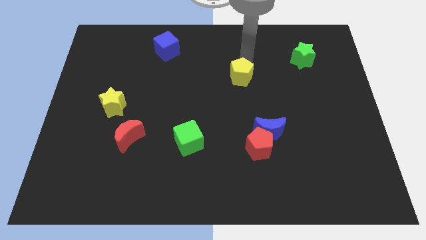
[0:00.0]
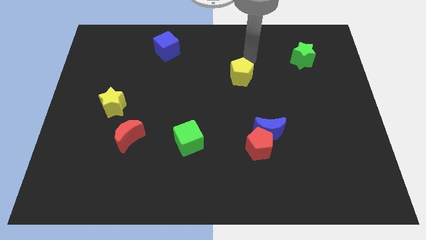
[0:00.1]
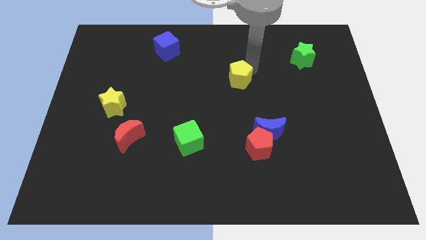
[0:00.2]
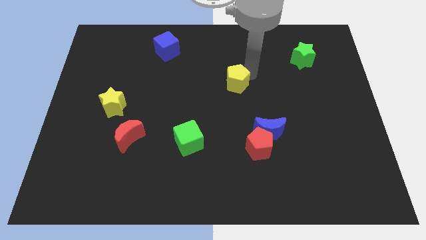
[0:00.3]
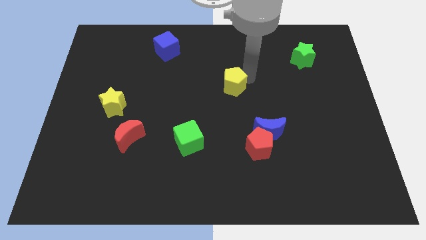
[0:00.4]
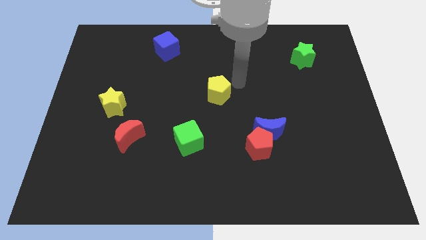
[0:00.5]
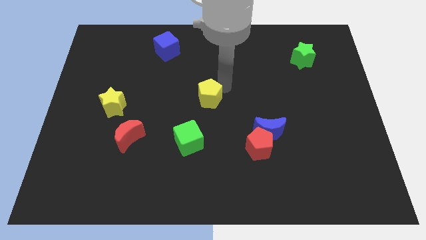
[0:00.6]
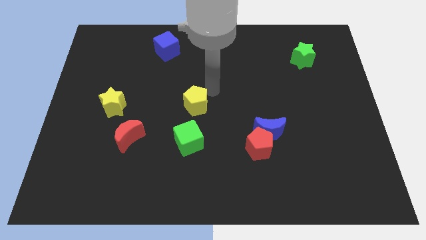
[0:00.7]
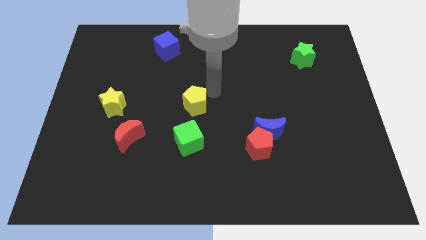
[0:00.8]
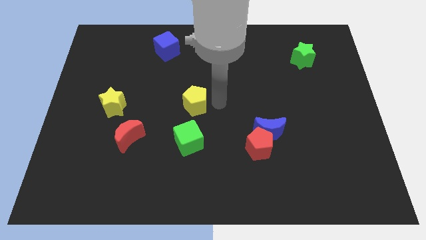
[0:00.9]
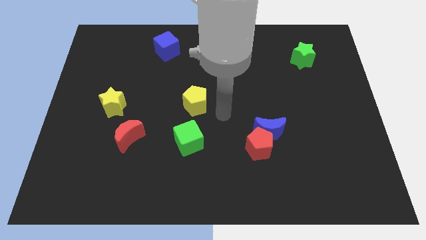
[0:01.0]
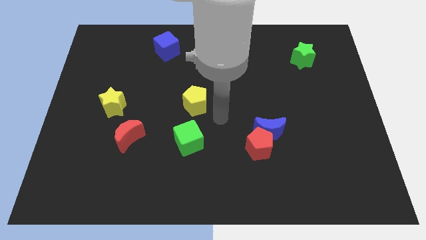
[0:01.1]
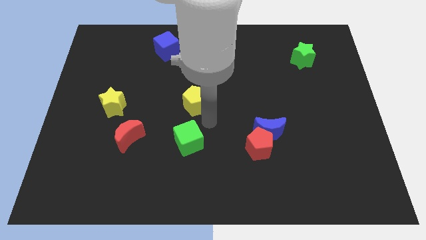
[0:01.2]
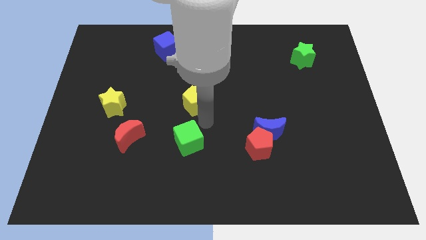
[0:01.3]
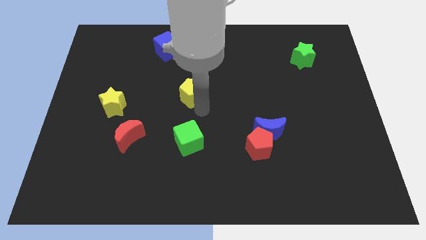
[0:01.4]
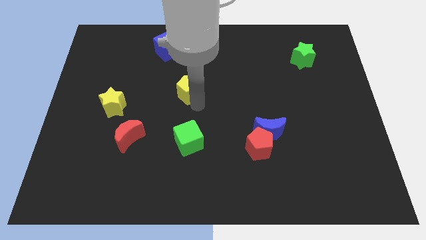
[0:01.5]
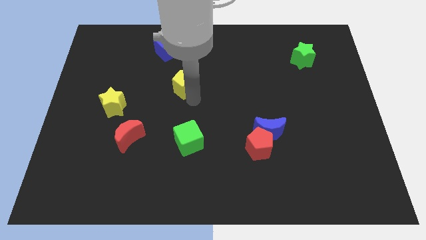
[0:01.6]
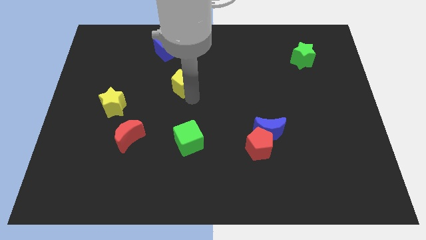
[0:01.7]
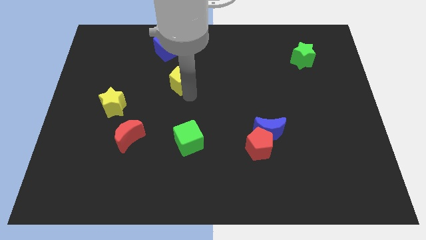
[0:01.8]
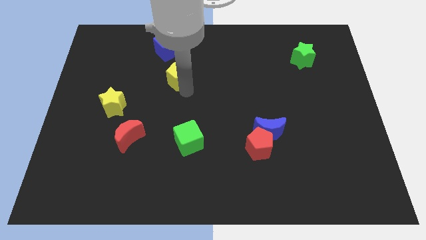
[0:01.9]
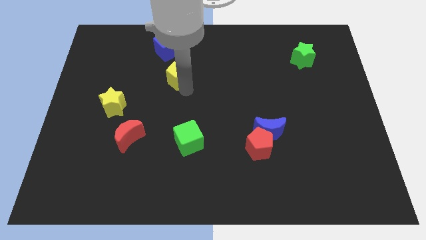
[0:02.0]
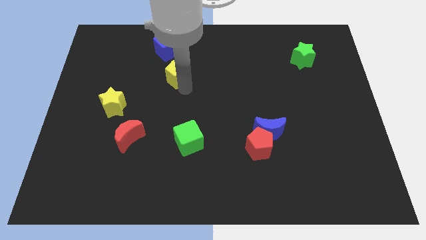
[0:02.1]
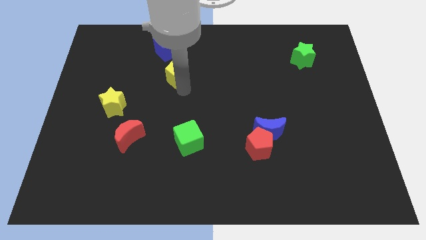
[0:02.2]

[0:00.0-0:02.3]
place the yellow pentagon in between the blue and green cubes

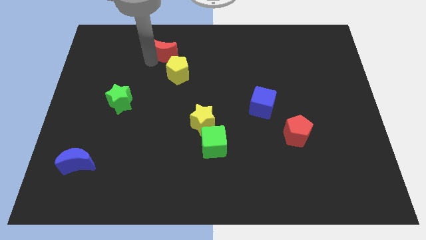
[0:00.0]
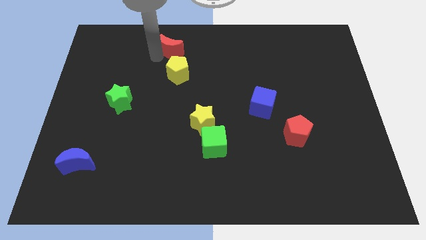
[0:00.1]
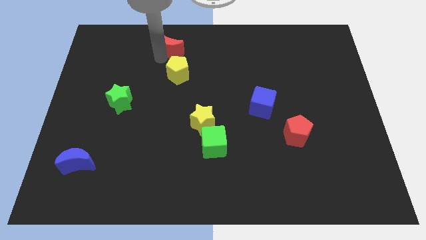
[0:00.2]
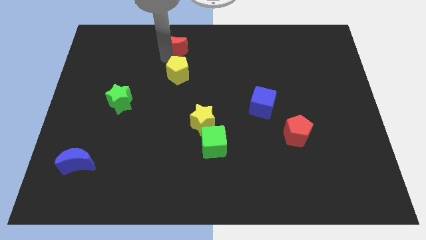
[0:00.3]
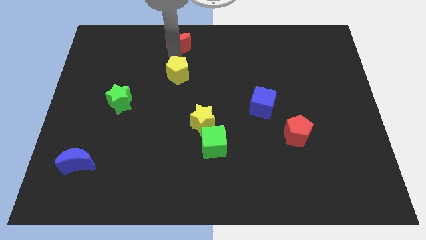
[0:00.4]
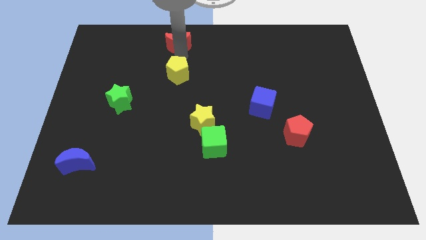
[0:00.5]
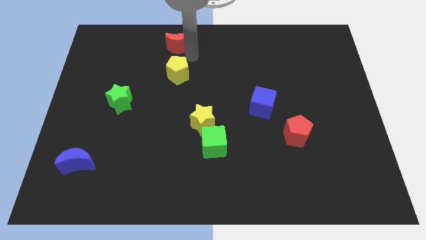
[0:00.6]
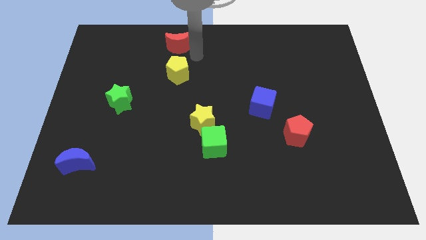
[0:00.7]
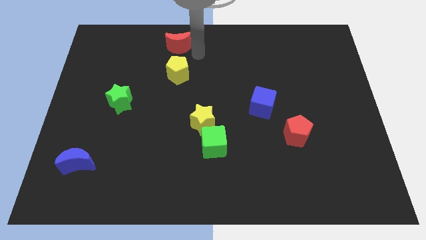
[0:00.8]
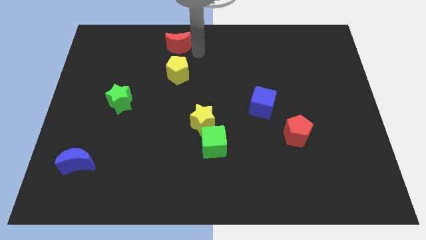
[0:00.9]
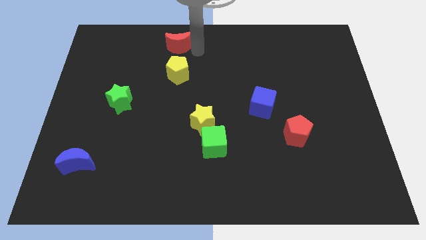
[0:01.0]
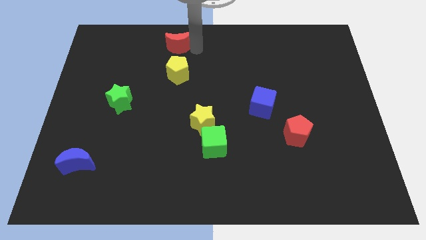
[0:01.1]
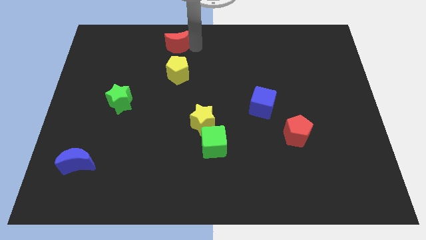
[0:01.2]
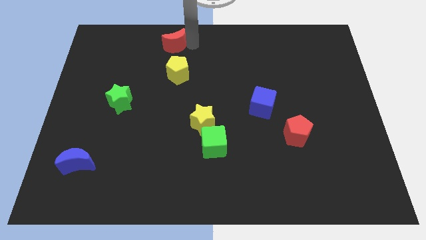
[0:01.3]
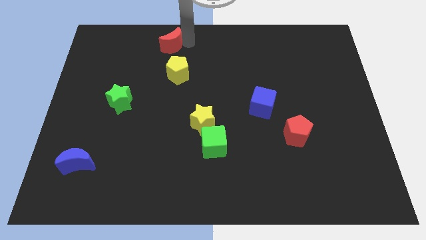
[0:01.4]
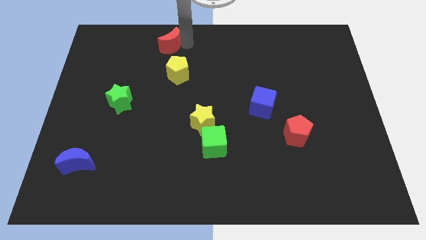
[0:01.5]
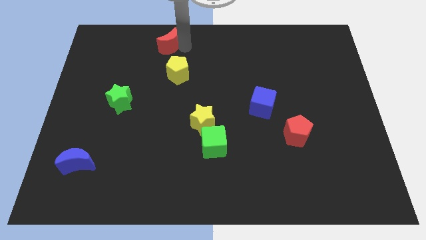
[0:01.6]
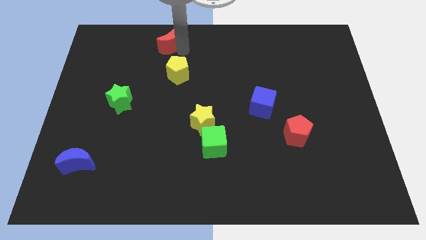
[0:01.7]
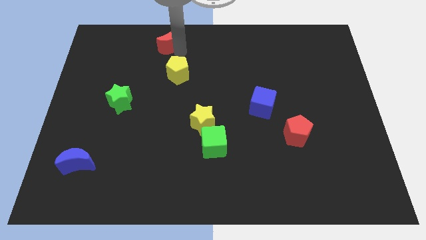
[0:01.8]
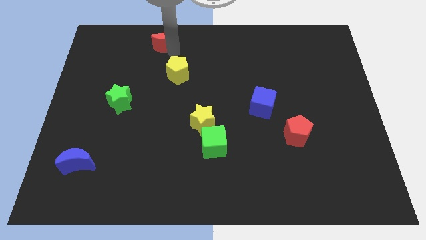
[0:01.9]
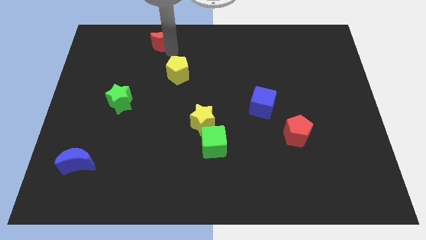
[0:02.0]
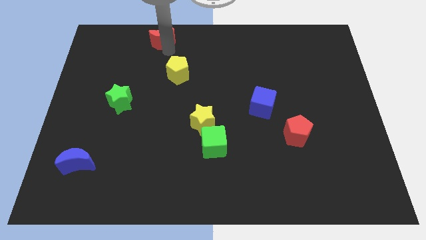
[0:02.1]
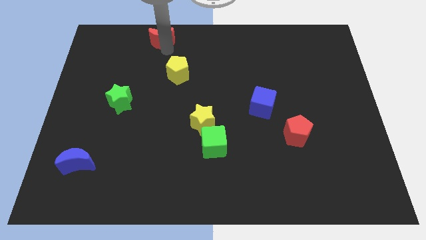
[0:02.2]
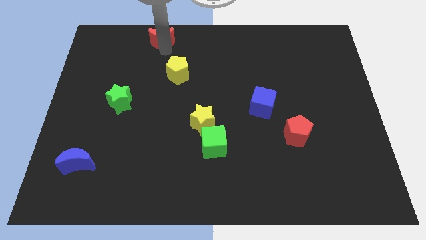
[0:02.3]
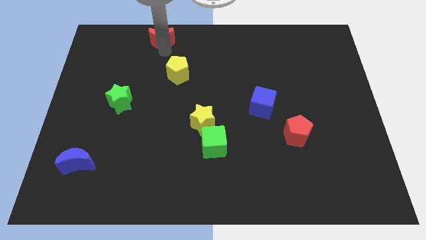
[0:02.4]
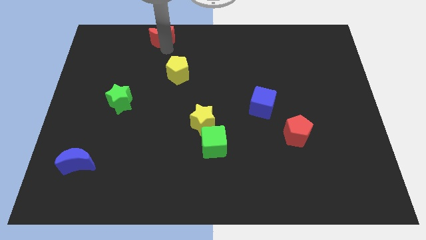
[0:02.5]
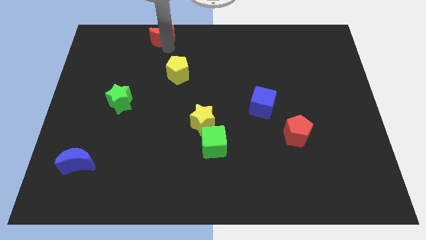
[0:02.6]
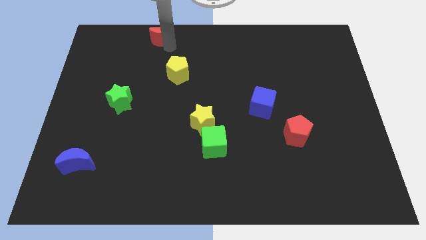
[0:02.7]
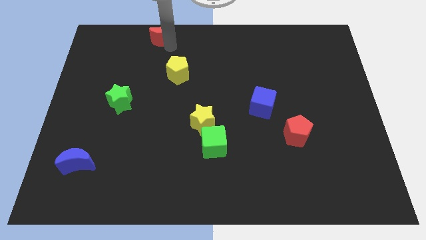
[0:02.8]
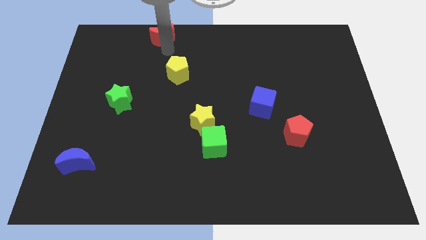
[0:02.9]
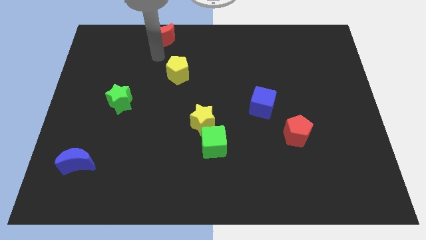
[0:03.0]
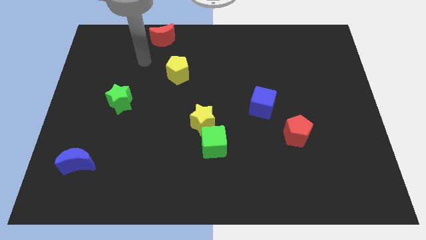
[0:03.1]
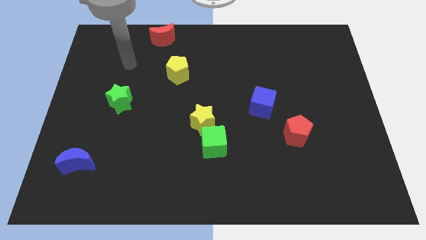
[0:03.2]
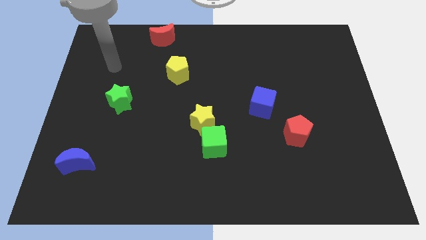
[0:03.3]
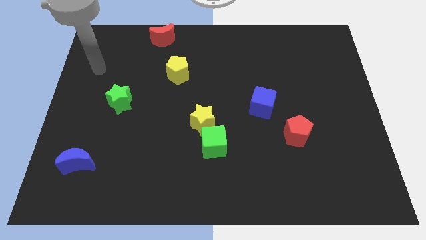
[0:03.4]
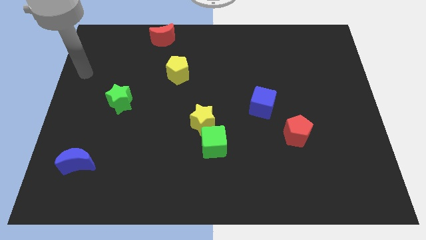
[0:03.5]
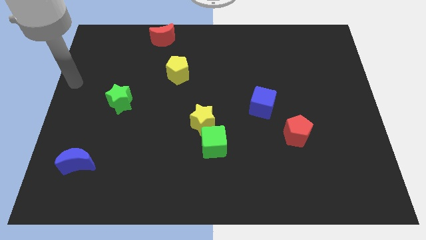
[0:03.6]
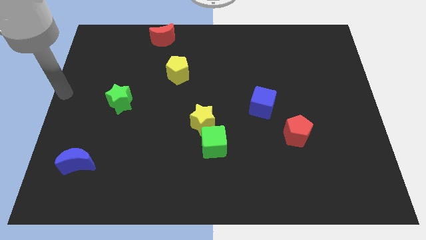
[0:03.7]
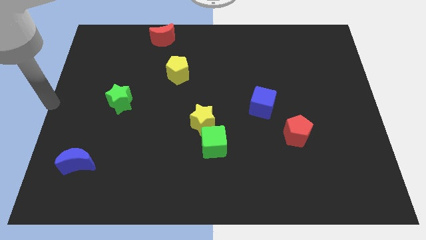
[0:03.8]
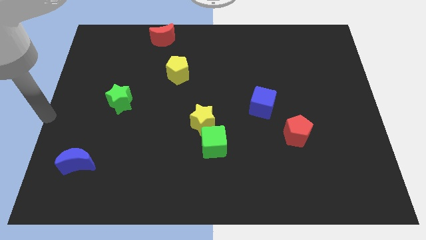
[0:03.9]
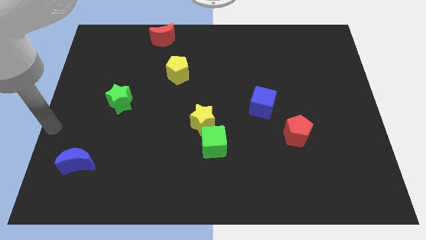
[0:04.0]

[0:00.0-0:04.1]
push the red crescent to the top of the board

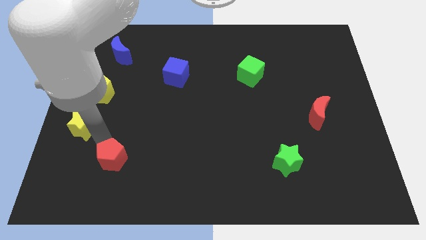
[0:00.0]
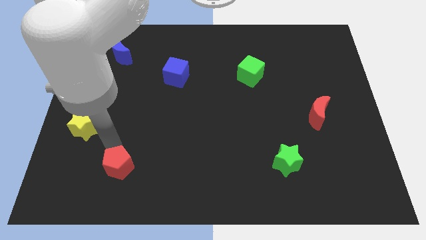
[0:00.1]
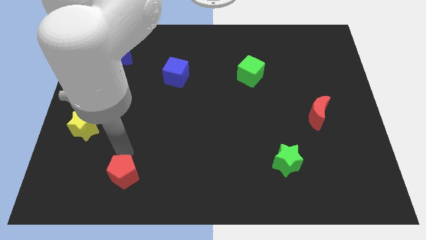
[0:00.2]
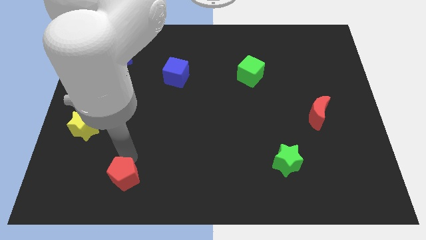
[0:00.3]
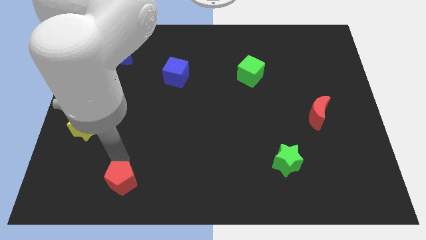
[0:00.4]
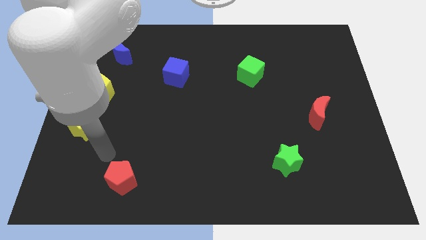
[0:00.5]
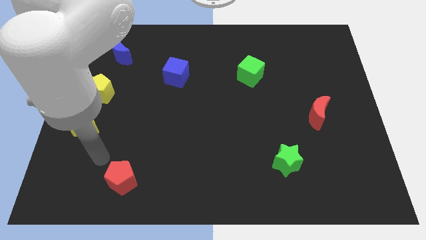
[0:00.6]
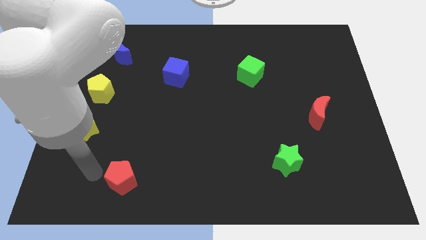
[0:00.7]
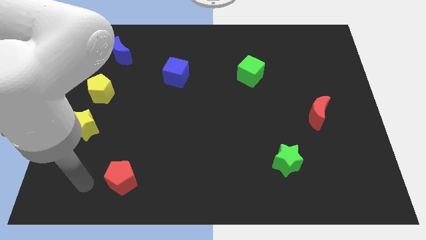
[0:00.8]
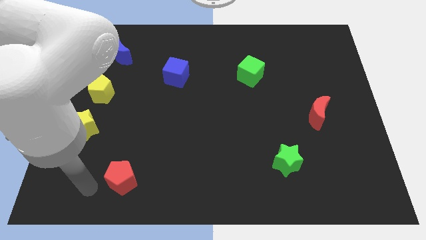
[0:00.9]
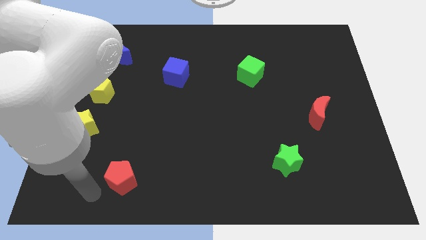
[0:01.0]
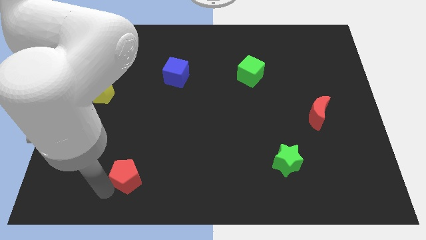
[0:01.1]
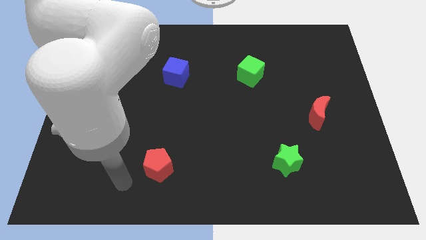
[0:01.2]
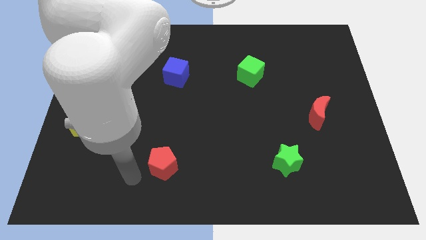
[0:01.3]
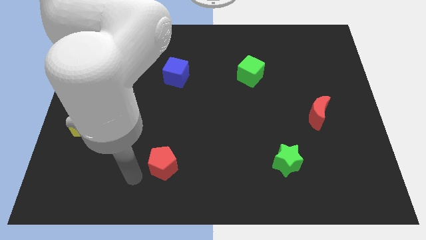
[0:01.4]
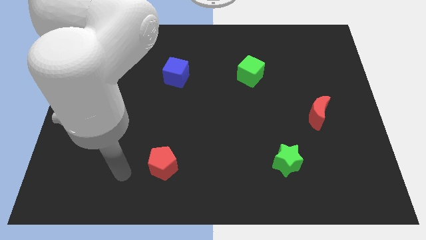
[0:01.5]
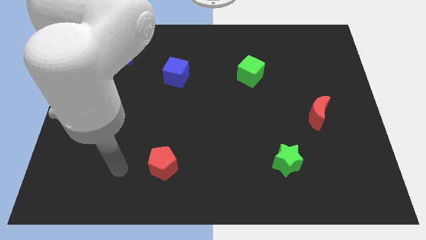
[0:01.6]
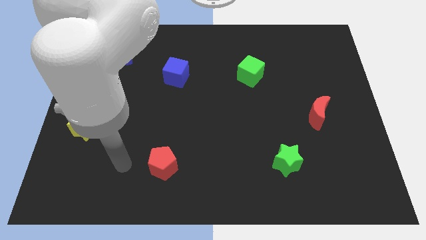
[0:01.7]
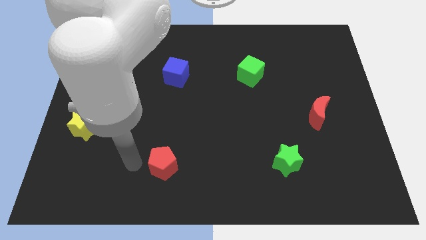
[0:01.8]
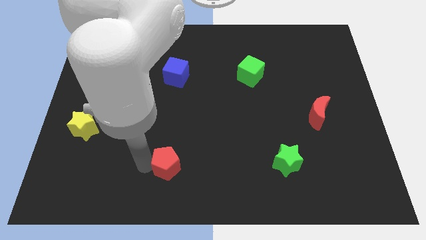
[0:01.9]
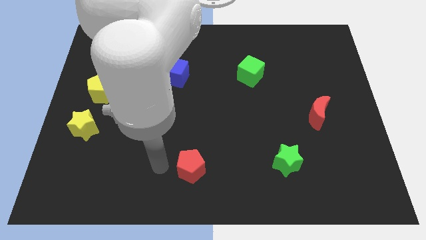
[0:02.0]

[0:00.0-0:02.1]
move the red pentagon towards the right side of the table

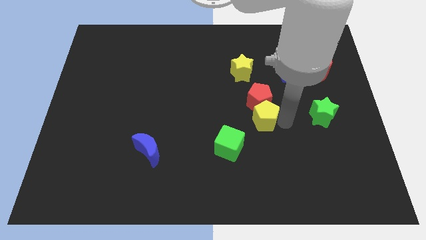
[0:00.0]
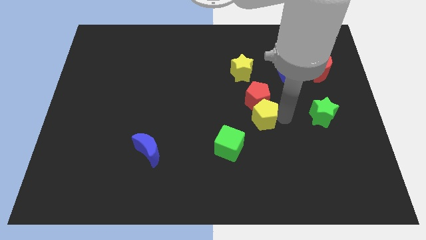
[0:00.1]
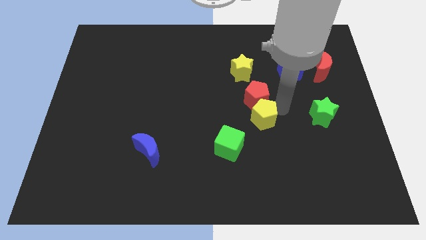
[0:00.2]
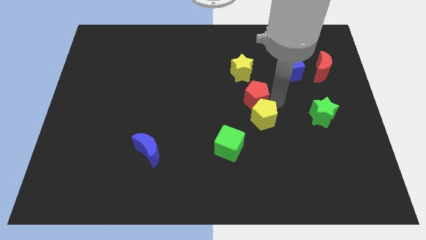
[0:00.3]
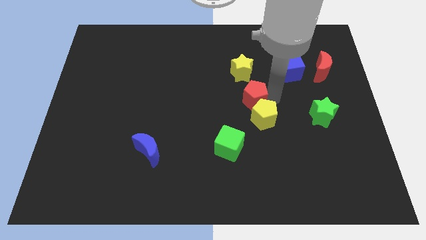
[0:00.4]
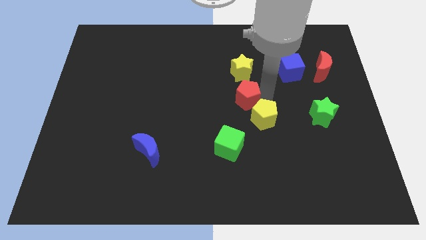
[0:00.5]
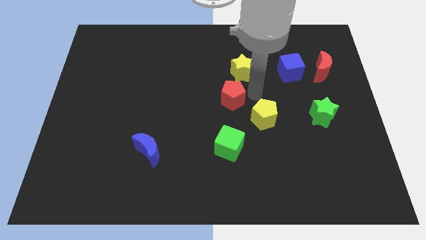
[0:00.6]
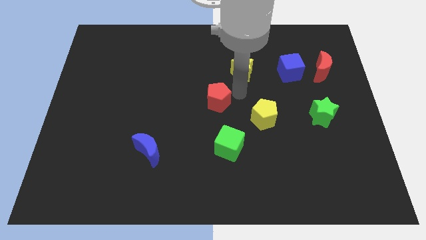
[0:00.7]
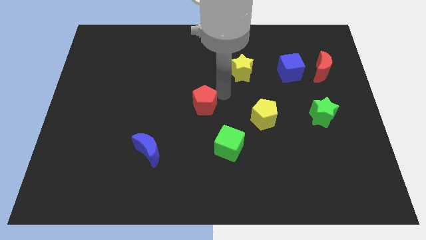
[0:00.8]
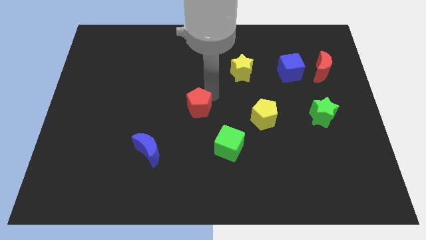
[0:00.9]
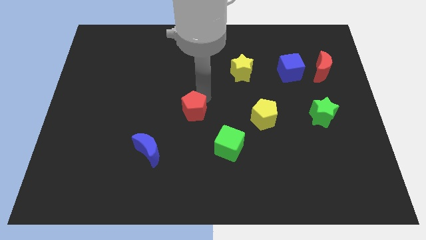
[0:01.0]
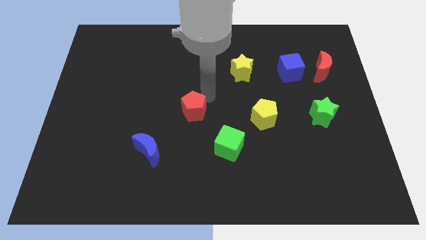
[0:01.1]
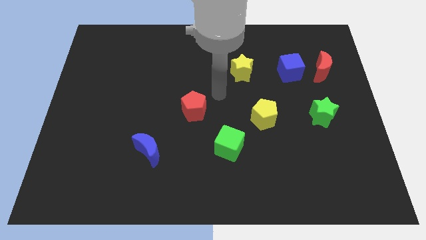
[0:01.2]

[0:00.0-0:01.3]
move the red pentagon away from the yellow pentagon
